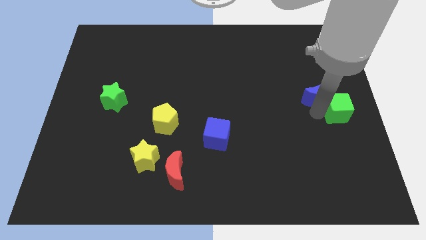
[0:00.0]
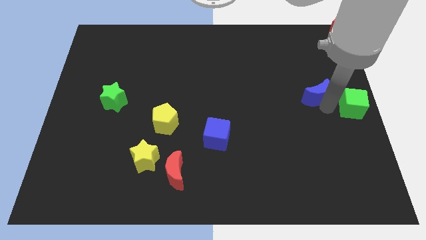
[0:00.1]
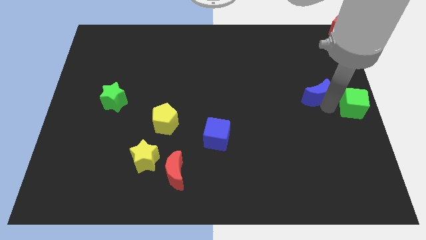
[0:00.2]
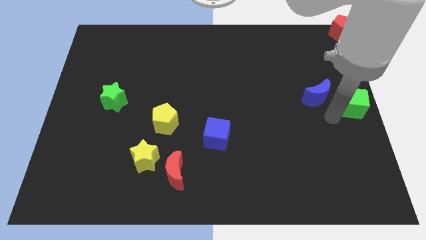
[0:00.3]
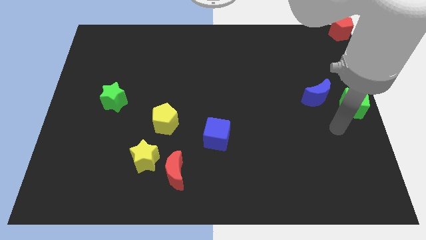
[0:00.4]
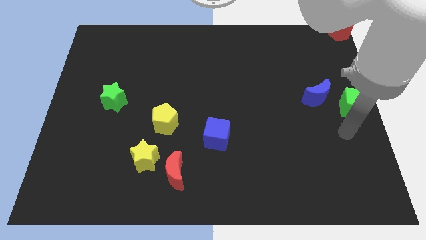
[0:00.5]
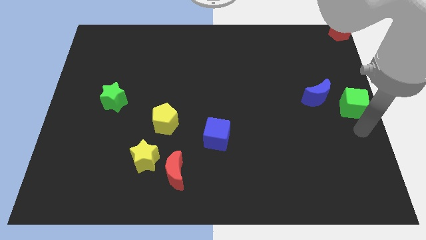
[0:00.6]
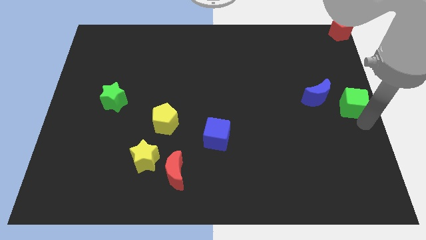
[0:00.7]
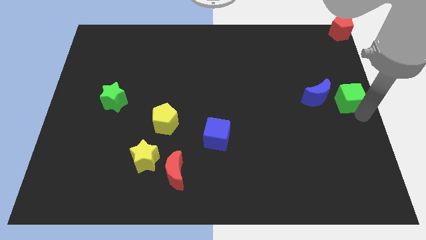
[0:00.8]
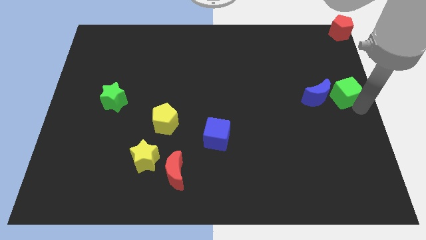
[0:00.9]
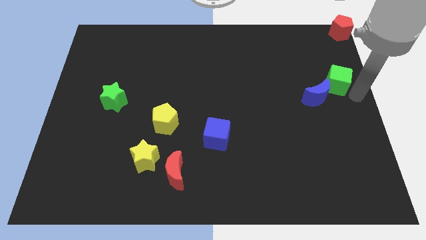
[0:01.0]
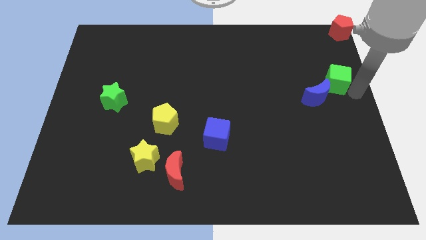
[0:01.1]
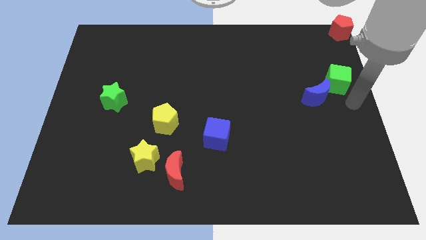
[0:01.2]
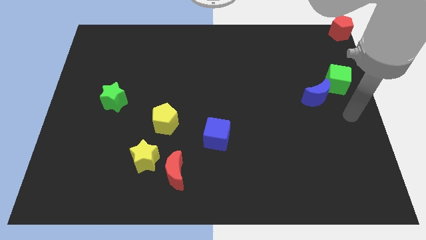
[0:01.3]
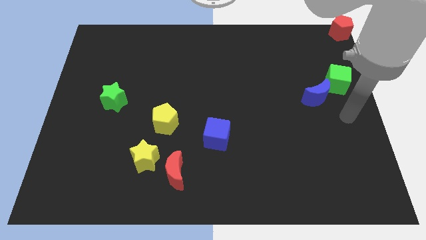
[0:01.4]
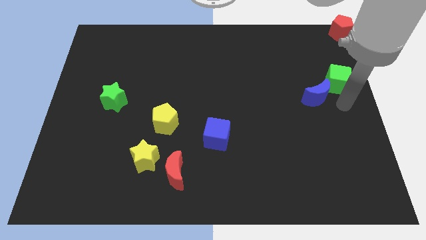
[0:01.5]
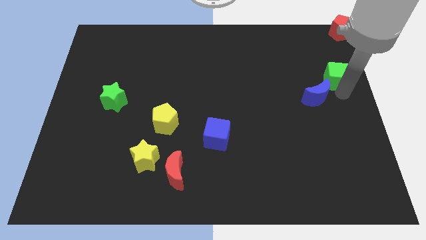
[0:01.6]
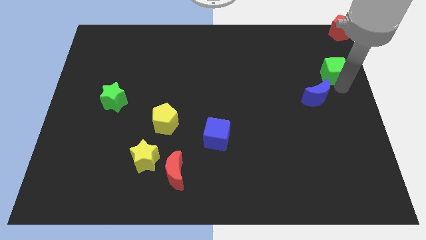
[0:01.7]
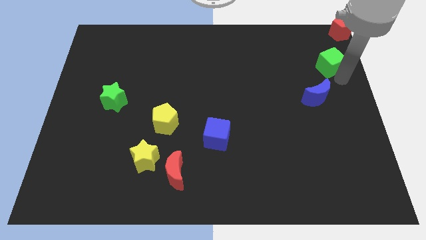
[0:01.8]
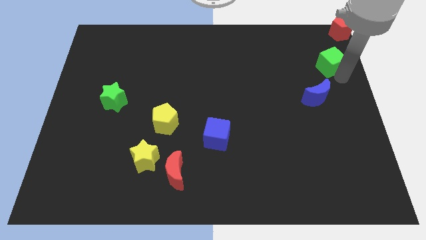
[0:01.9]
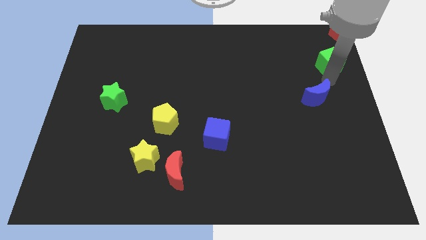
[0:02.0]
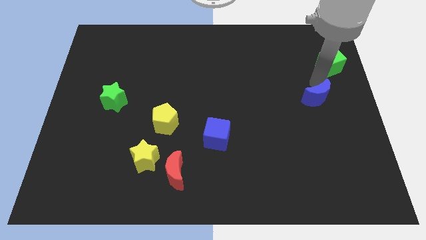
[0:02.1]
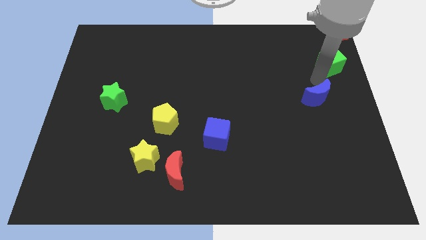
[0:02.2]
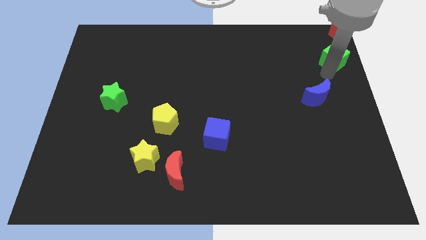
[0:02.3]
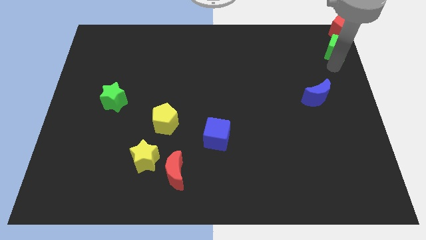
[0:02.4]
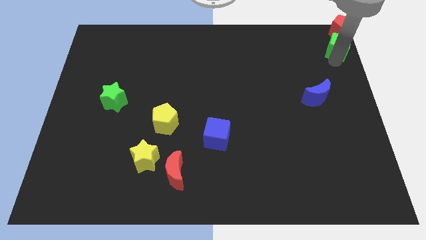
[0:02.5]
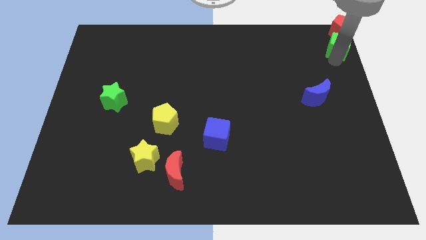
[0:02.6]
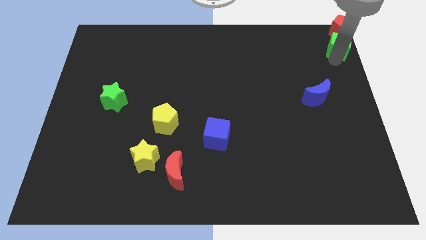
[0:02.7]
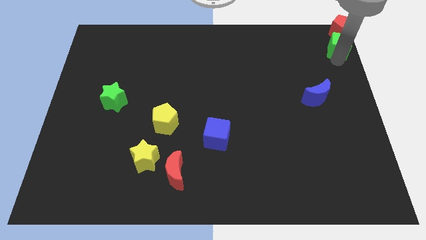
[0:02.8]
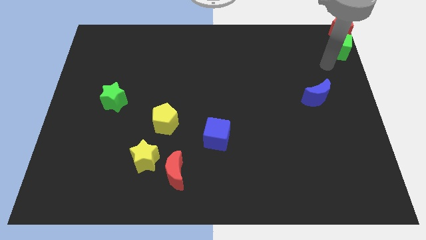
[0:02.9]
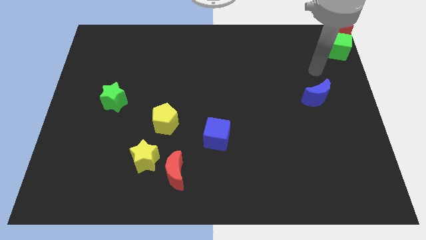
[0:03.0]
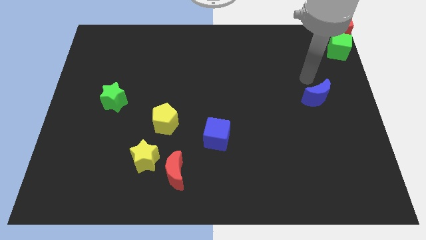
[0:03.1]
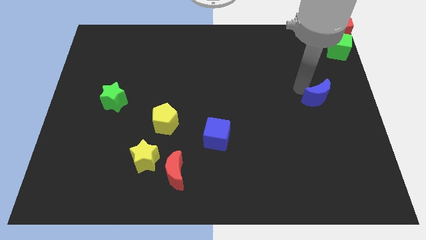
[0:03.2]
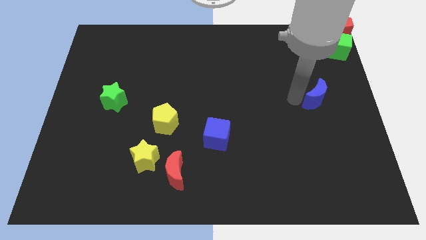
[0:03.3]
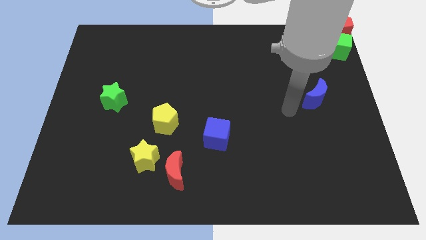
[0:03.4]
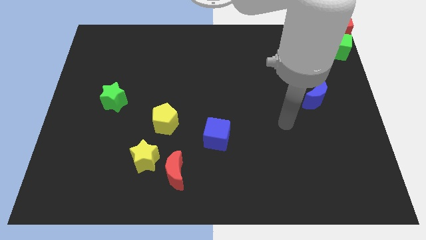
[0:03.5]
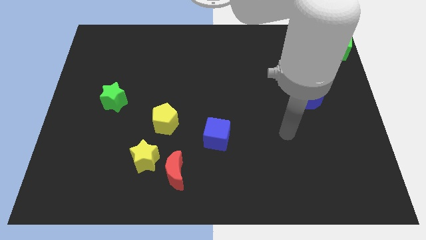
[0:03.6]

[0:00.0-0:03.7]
move the green star close to the red pentagon

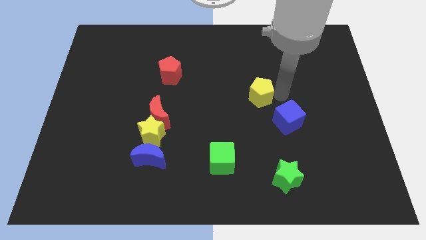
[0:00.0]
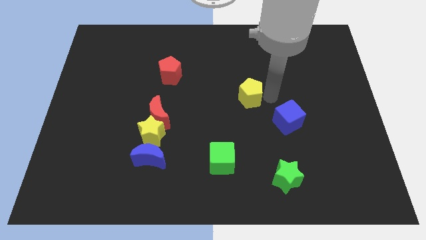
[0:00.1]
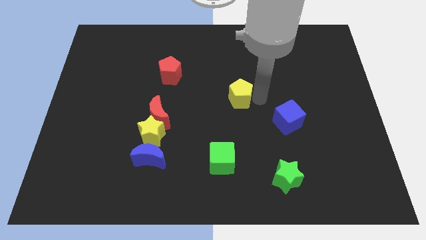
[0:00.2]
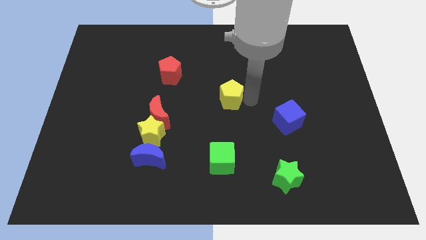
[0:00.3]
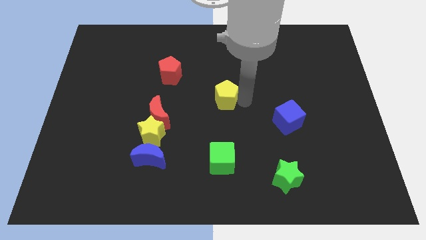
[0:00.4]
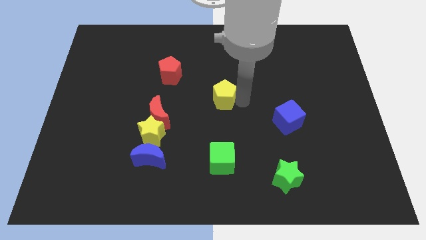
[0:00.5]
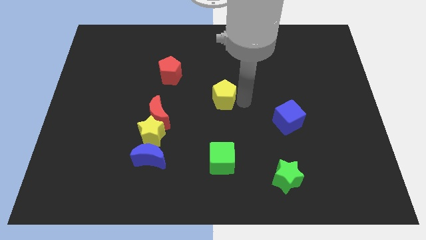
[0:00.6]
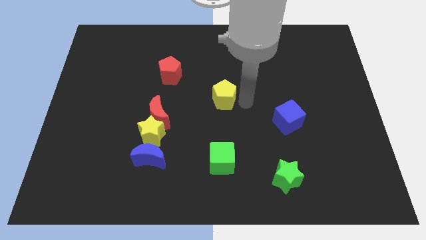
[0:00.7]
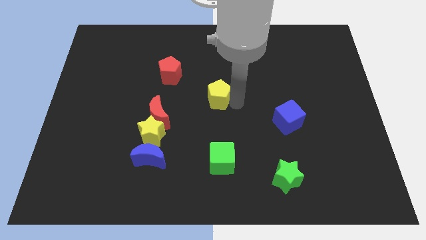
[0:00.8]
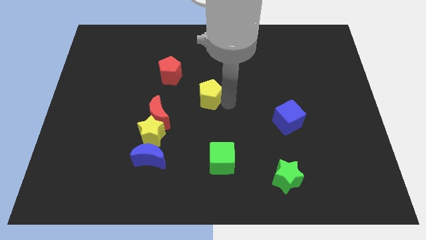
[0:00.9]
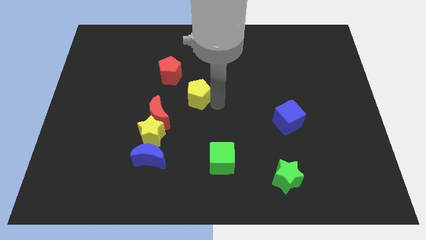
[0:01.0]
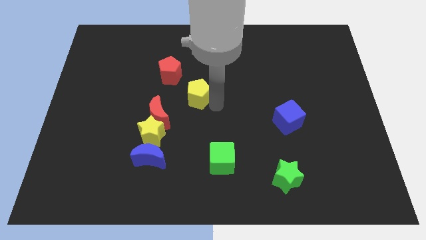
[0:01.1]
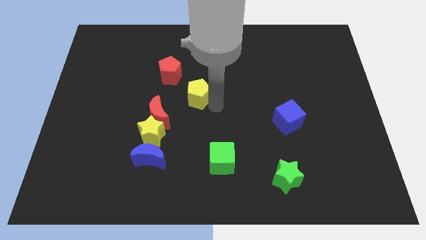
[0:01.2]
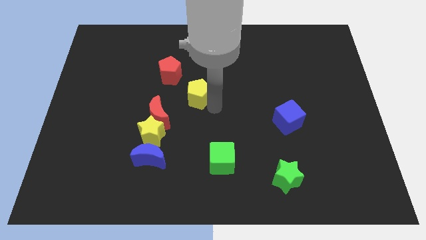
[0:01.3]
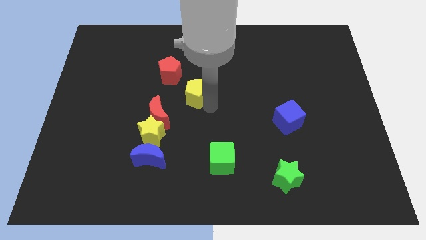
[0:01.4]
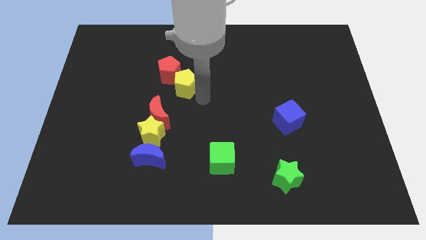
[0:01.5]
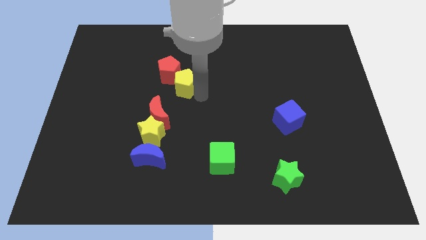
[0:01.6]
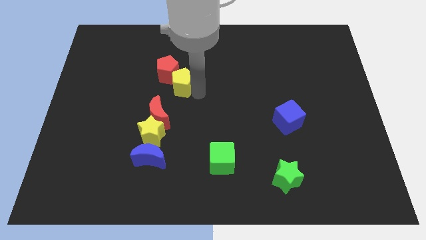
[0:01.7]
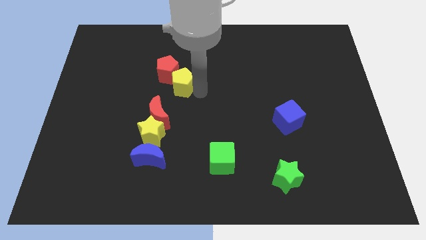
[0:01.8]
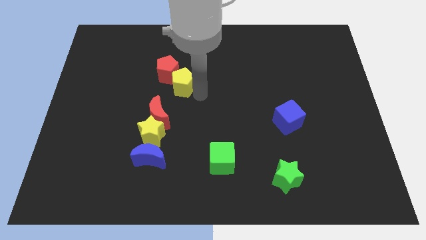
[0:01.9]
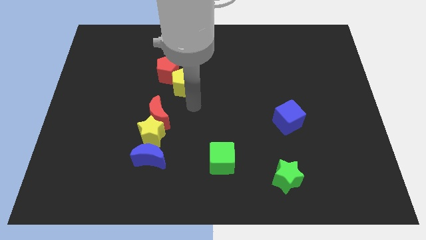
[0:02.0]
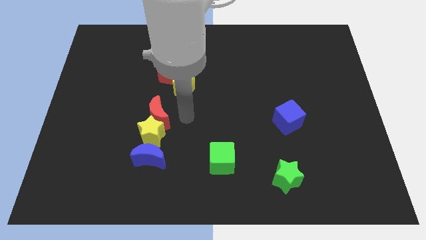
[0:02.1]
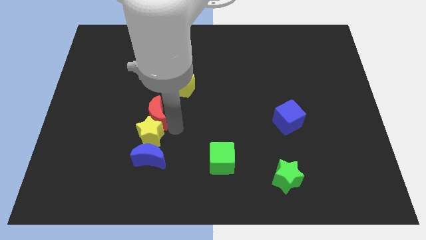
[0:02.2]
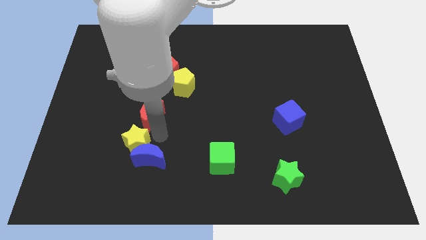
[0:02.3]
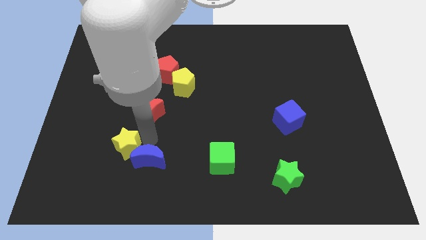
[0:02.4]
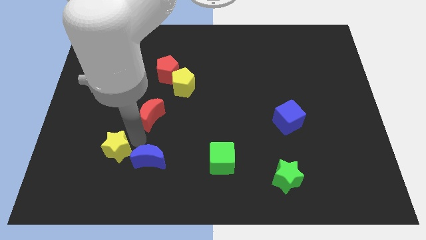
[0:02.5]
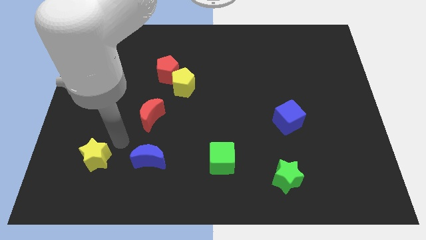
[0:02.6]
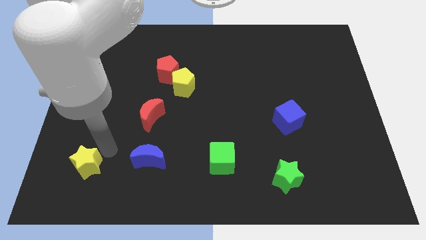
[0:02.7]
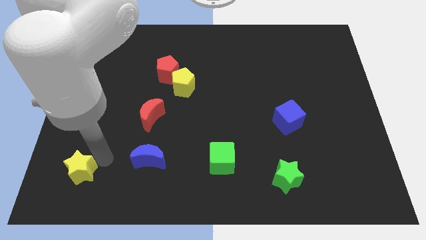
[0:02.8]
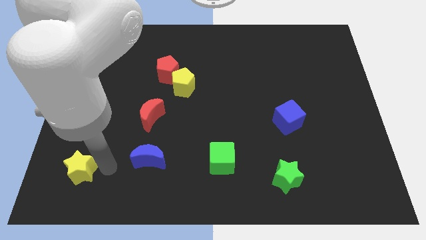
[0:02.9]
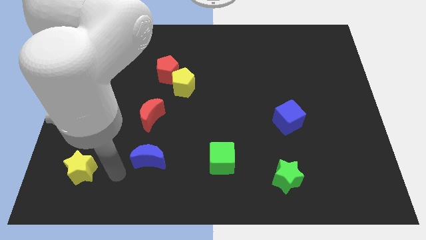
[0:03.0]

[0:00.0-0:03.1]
push the yellow star slightly towards the bottom left

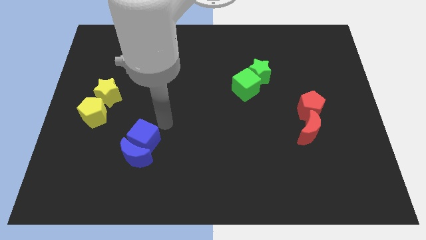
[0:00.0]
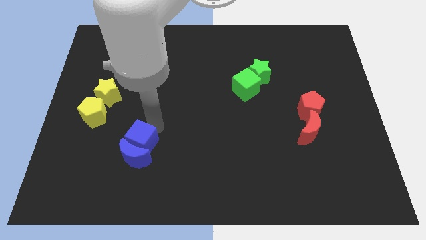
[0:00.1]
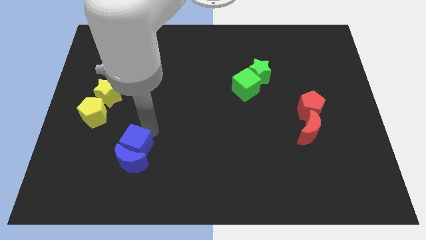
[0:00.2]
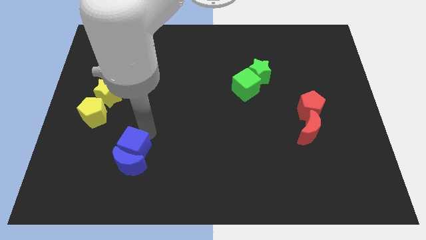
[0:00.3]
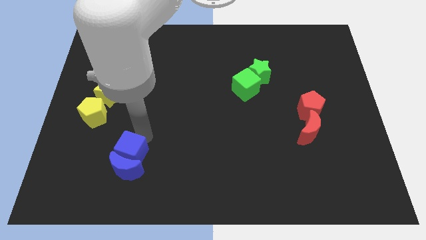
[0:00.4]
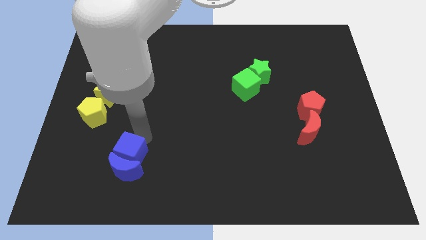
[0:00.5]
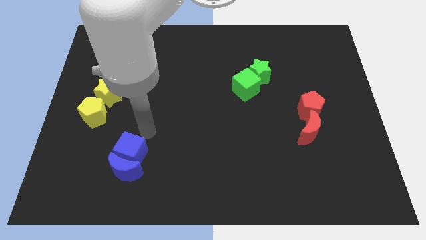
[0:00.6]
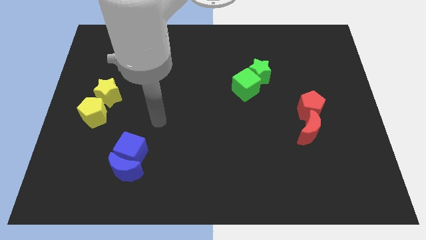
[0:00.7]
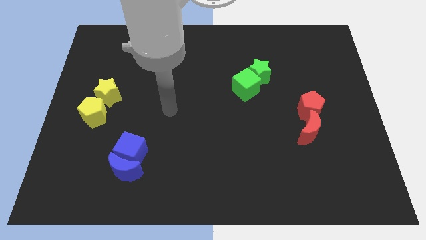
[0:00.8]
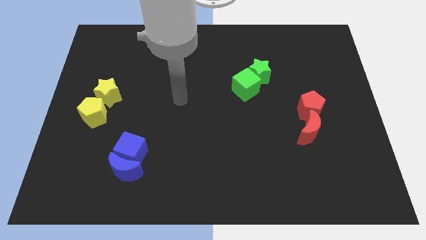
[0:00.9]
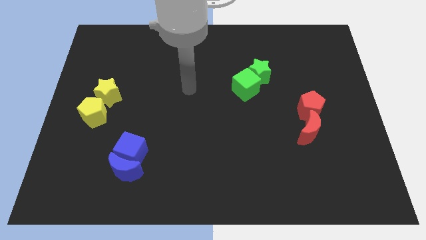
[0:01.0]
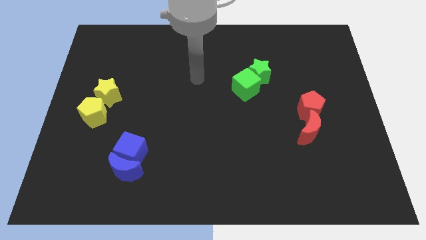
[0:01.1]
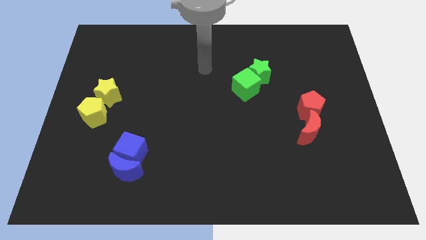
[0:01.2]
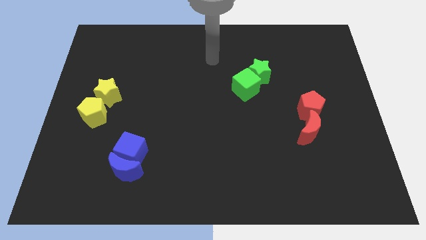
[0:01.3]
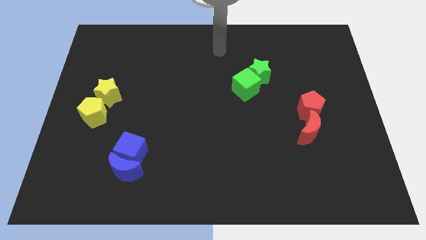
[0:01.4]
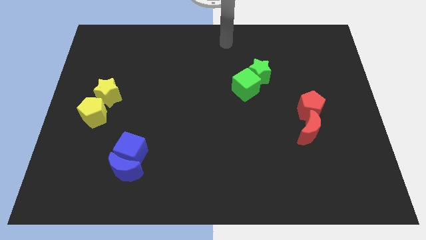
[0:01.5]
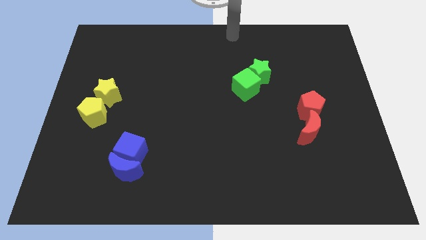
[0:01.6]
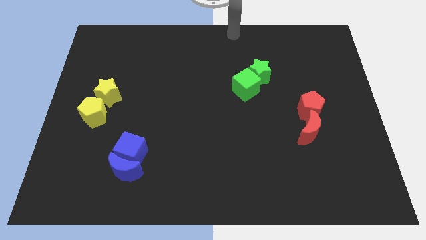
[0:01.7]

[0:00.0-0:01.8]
move the arm towards the top centre of the board

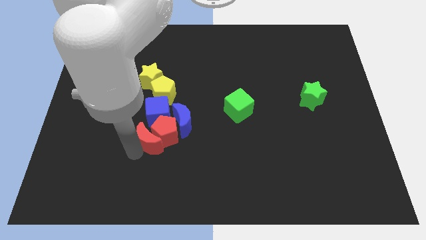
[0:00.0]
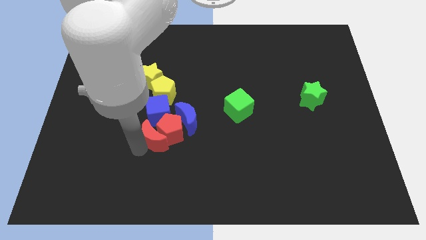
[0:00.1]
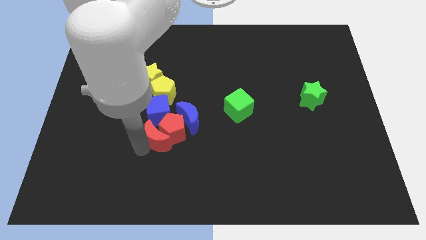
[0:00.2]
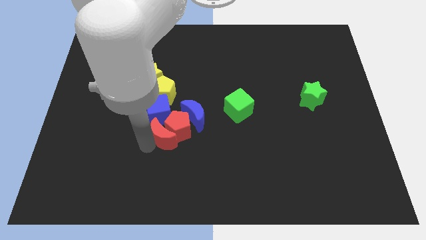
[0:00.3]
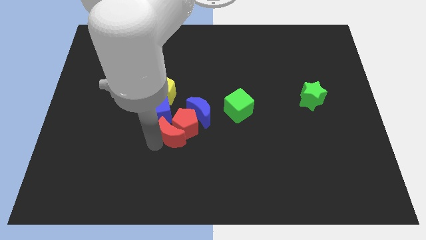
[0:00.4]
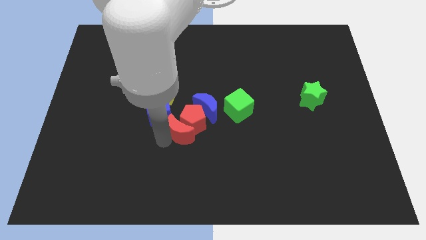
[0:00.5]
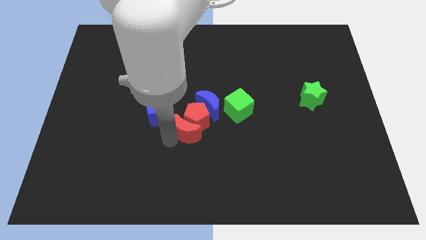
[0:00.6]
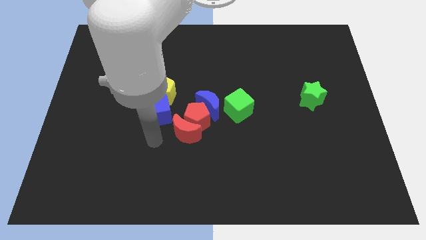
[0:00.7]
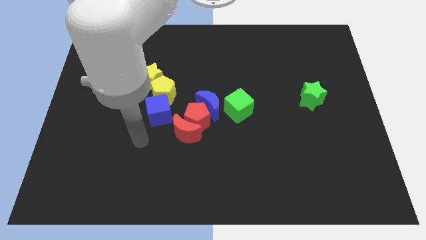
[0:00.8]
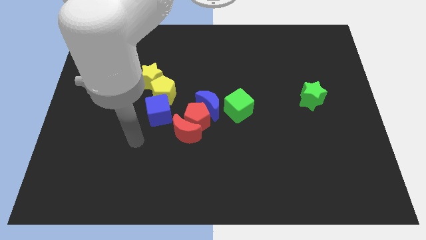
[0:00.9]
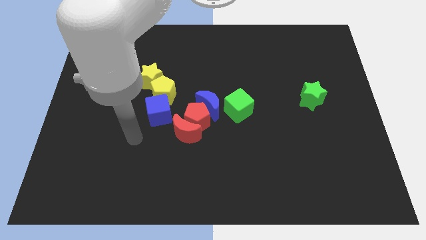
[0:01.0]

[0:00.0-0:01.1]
push the red blocks along with the blue crescent to the center of the board
